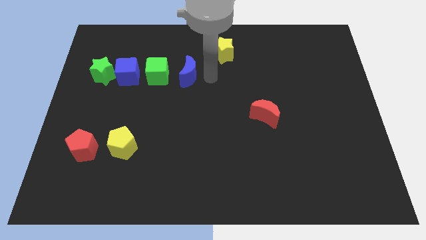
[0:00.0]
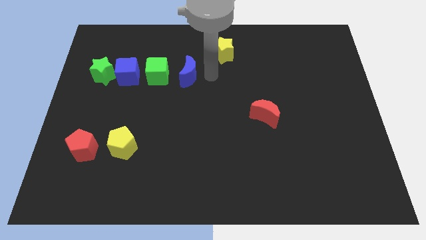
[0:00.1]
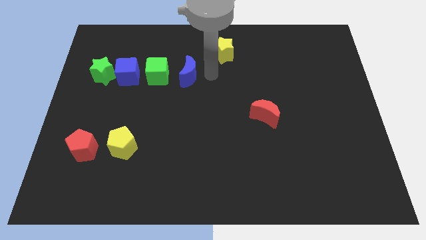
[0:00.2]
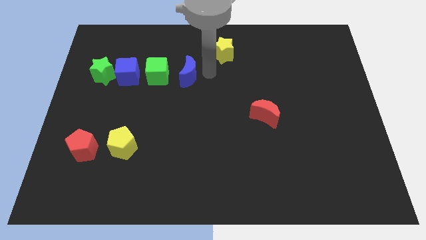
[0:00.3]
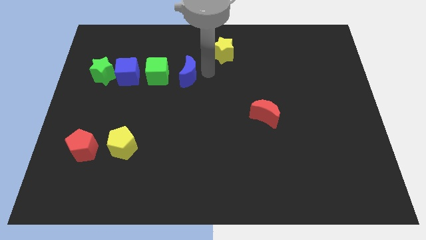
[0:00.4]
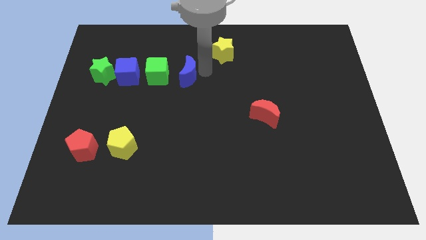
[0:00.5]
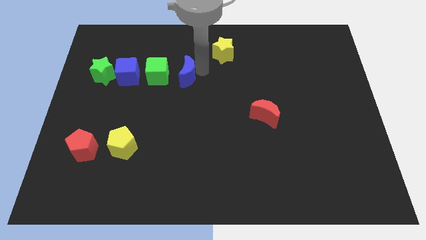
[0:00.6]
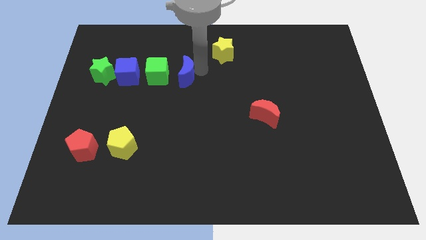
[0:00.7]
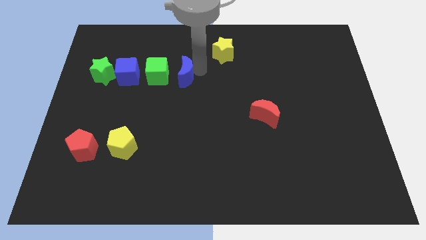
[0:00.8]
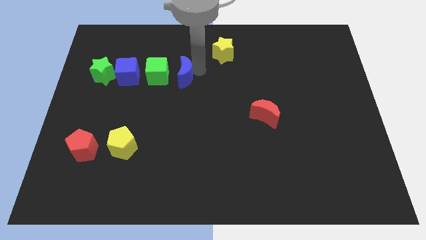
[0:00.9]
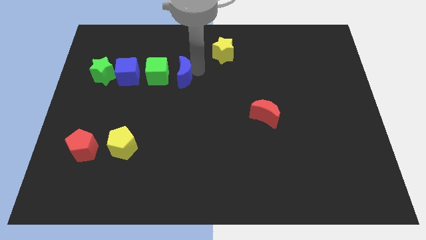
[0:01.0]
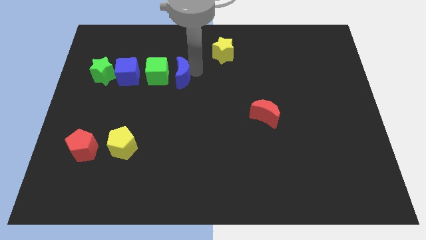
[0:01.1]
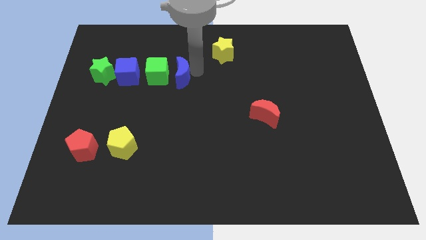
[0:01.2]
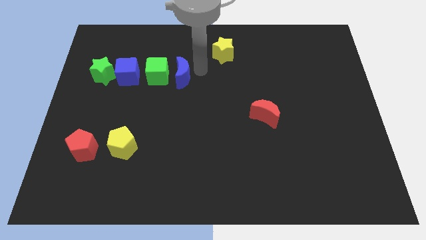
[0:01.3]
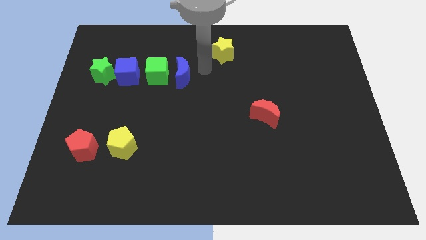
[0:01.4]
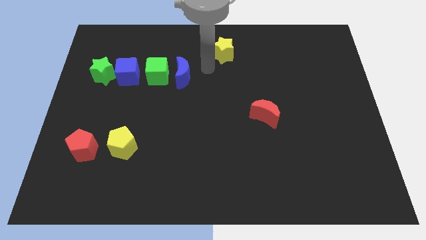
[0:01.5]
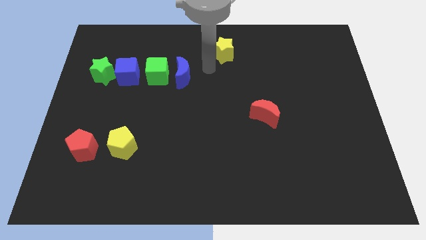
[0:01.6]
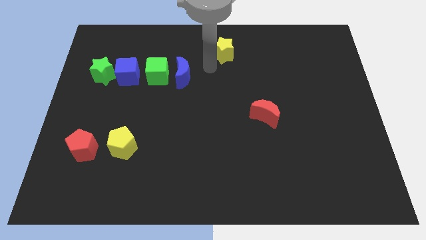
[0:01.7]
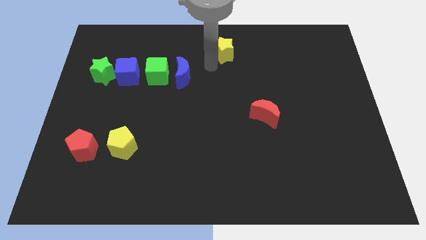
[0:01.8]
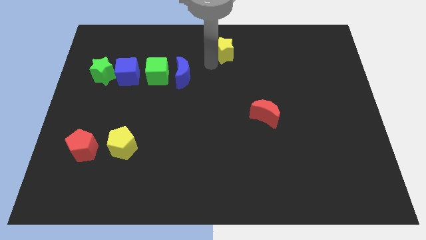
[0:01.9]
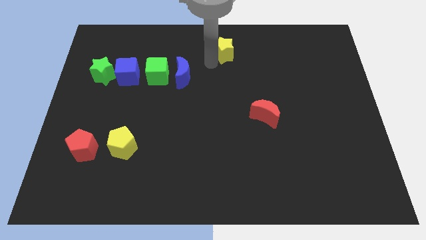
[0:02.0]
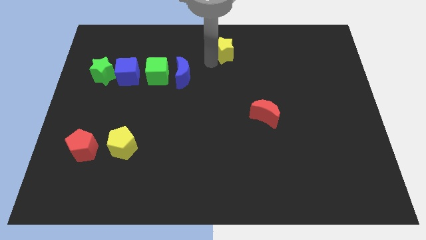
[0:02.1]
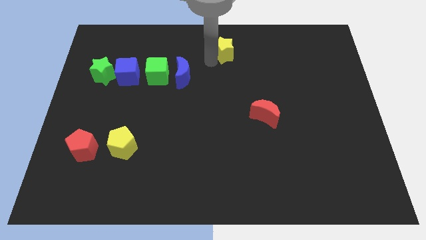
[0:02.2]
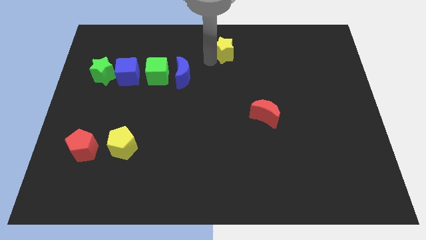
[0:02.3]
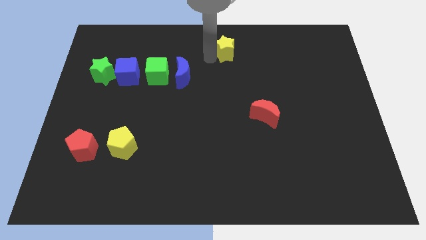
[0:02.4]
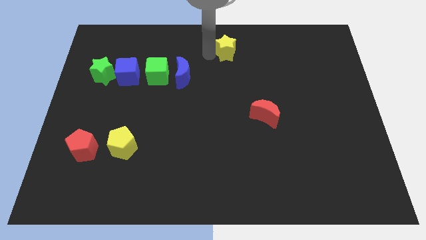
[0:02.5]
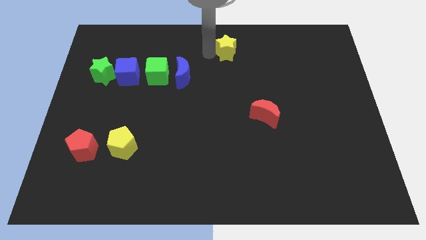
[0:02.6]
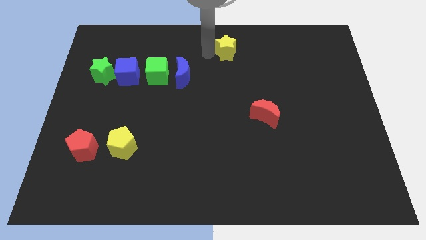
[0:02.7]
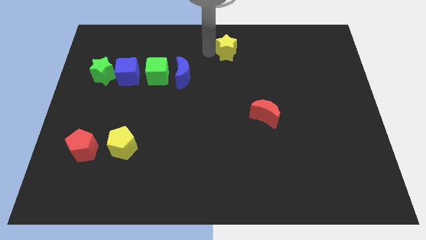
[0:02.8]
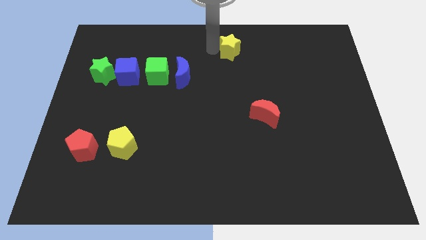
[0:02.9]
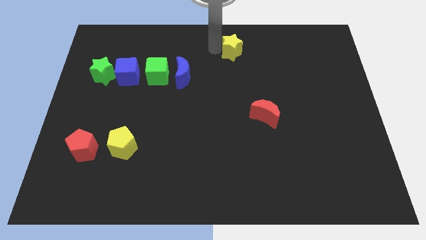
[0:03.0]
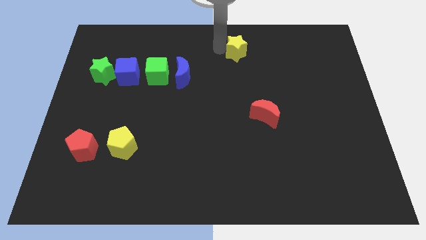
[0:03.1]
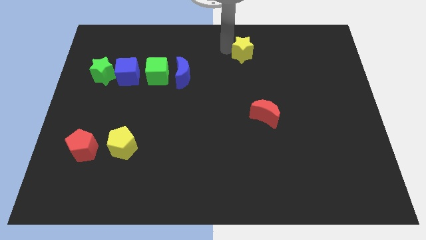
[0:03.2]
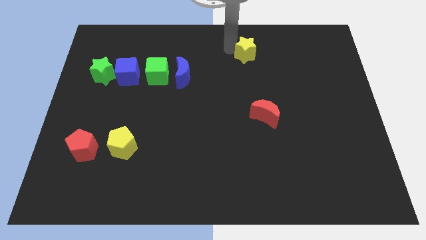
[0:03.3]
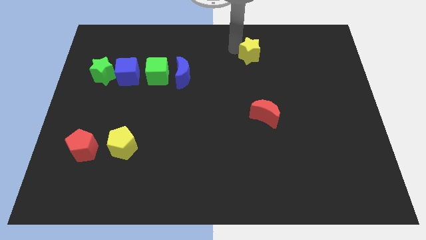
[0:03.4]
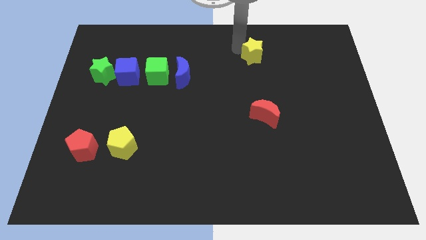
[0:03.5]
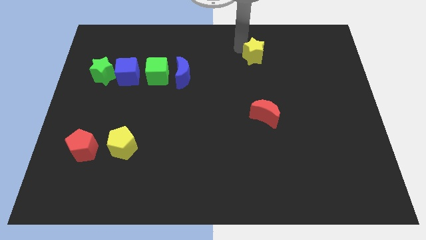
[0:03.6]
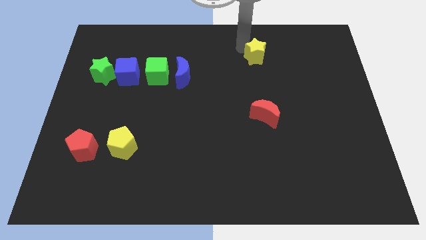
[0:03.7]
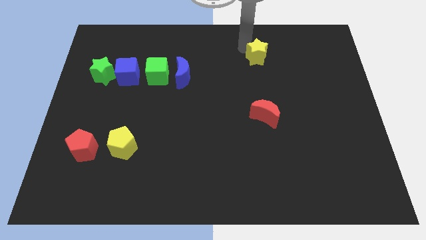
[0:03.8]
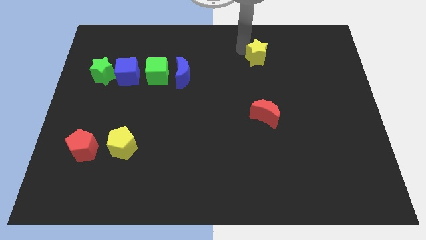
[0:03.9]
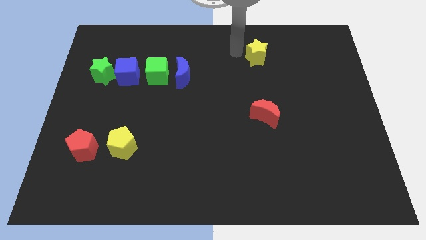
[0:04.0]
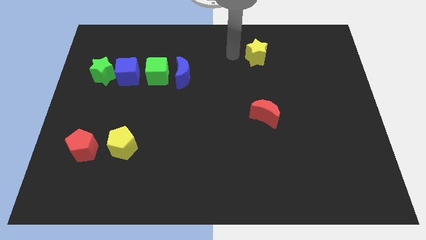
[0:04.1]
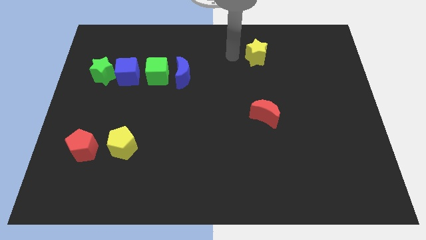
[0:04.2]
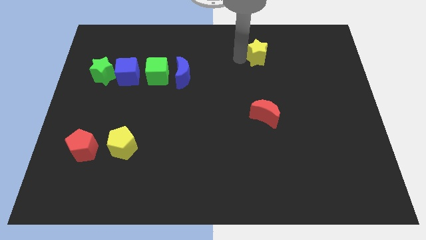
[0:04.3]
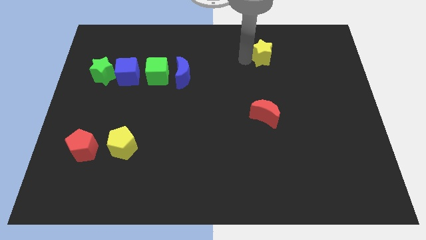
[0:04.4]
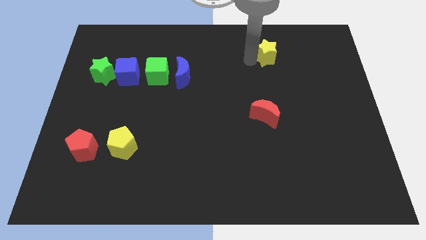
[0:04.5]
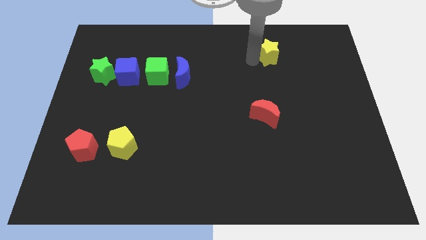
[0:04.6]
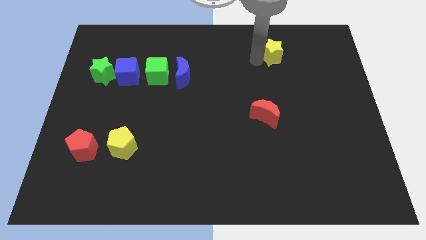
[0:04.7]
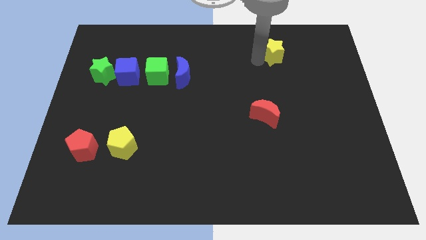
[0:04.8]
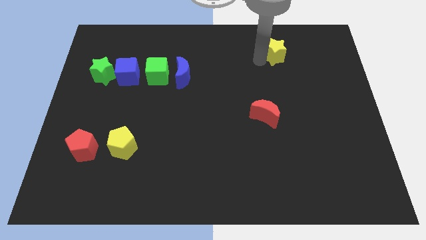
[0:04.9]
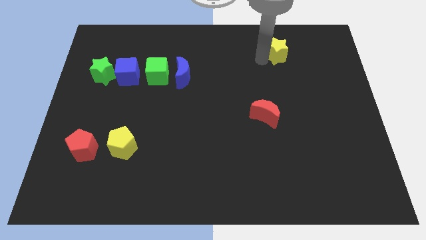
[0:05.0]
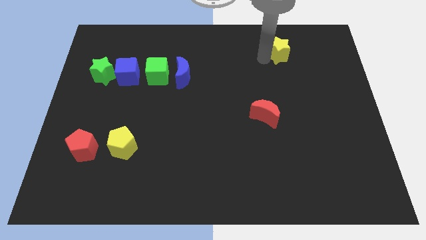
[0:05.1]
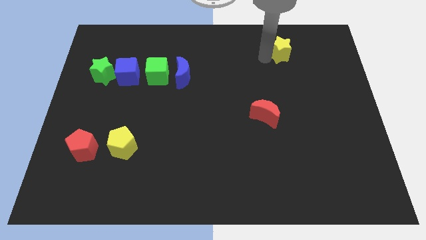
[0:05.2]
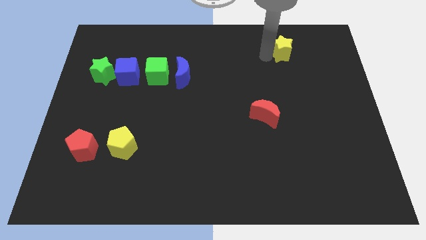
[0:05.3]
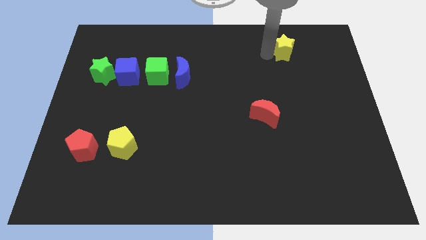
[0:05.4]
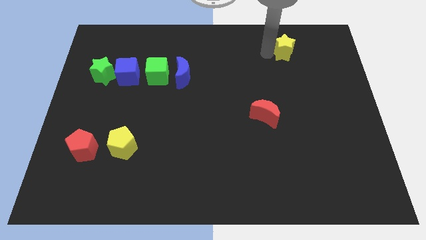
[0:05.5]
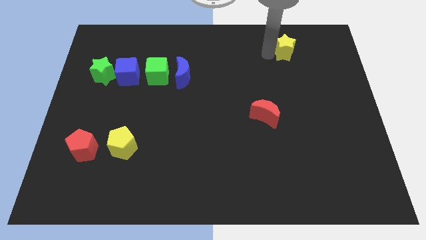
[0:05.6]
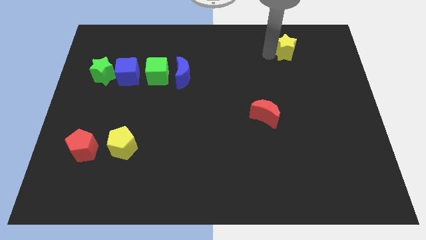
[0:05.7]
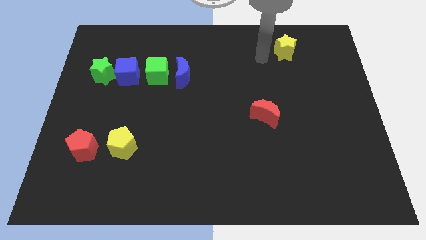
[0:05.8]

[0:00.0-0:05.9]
move the yellow star towards the right side

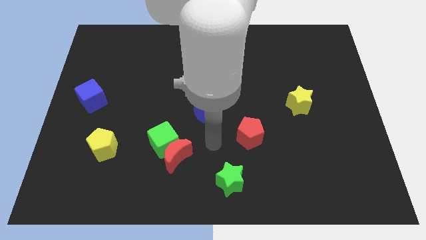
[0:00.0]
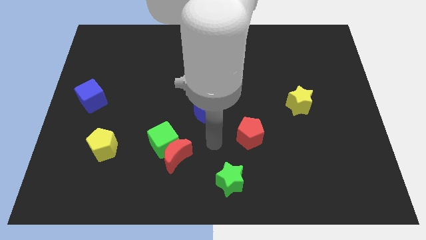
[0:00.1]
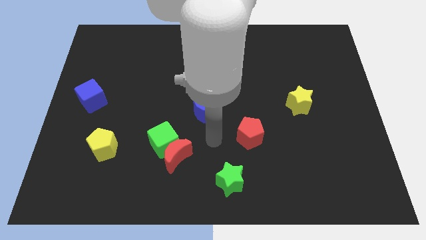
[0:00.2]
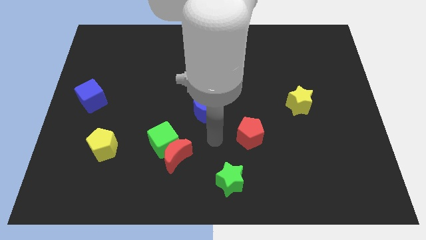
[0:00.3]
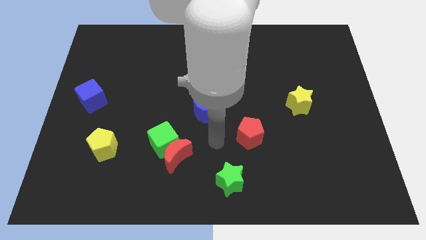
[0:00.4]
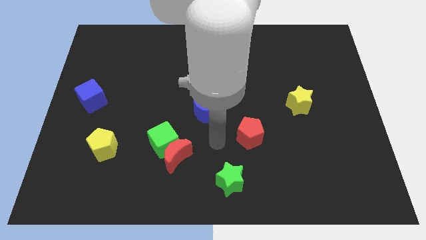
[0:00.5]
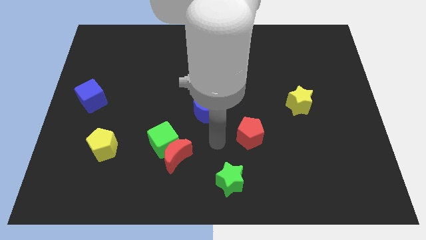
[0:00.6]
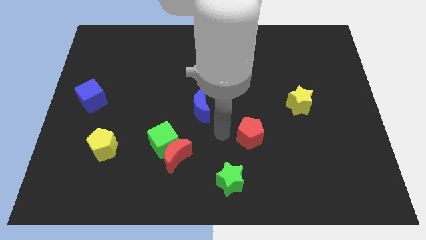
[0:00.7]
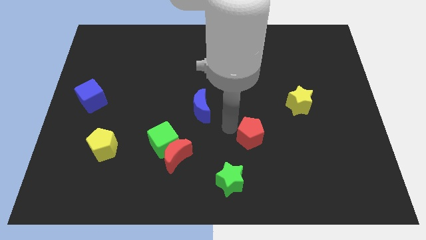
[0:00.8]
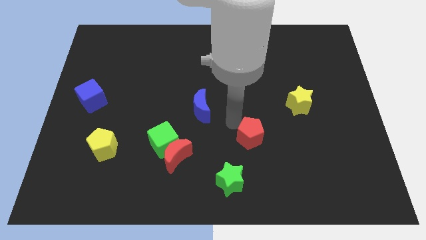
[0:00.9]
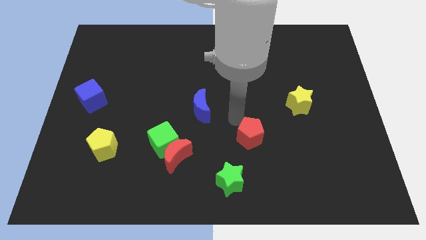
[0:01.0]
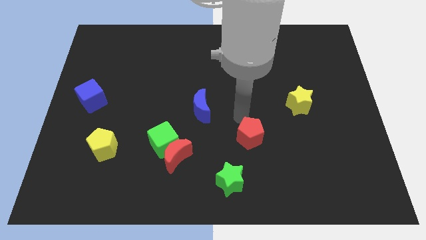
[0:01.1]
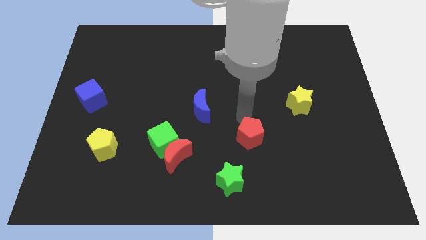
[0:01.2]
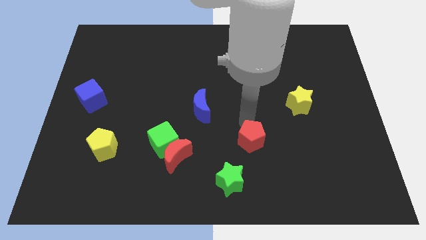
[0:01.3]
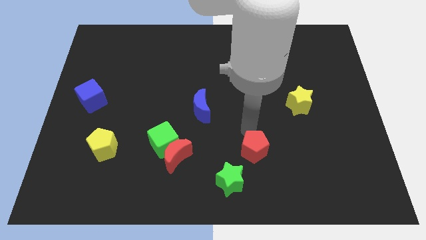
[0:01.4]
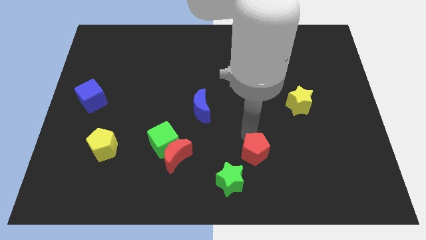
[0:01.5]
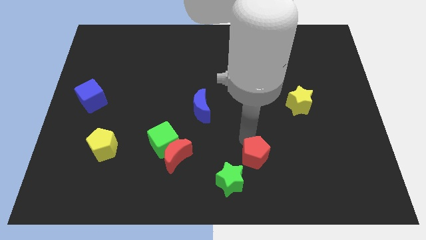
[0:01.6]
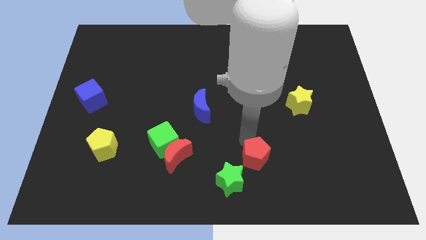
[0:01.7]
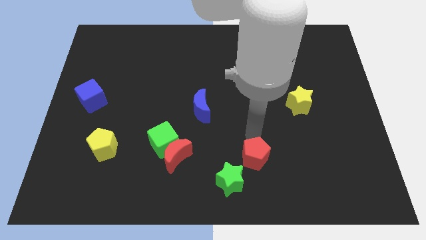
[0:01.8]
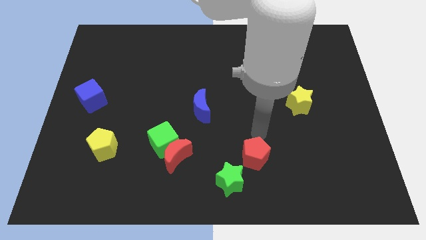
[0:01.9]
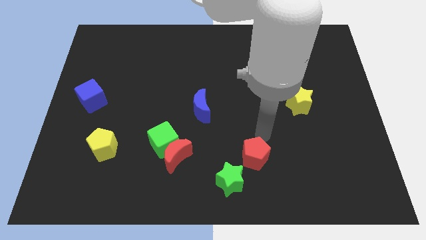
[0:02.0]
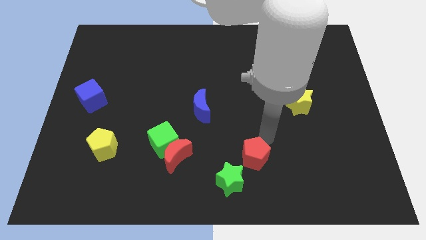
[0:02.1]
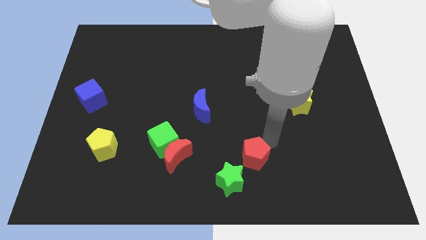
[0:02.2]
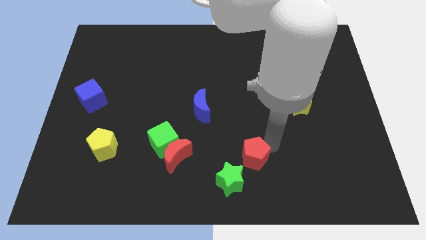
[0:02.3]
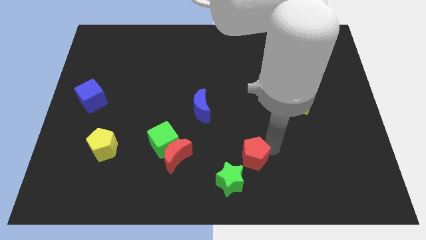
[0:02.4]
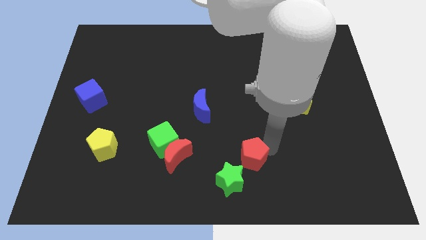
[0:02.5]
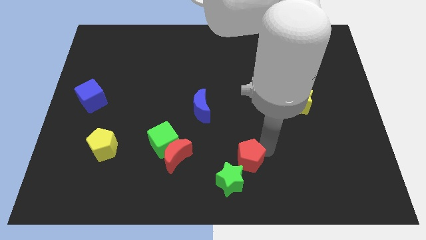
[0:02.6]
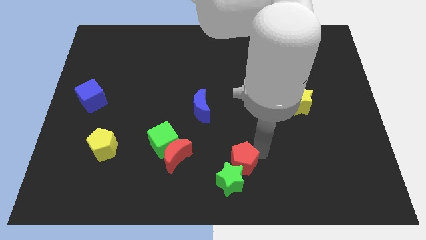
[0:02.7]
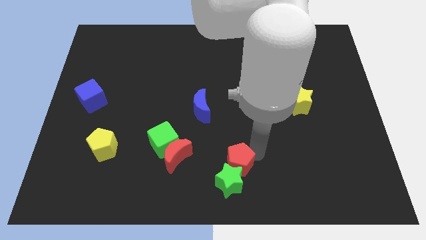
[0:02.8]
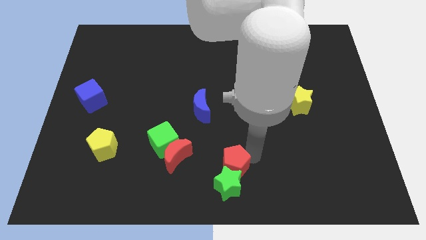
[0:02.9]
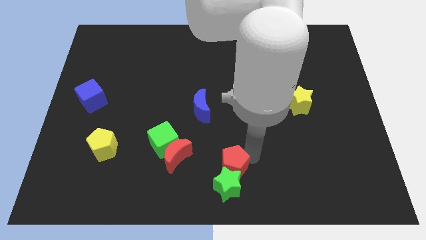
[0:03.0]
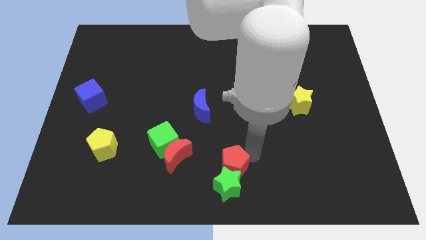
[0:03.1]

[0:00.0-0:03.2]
place the red pentagon on the top of green star
